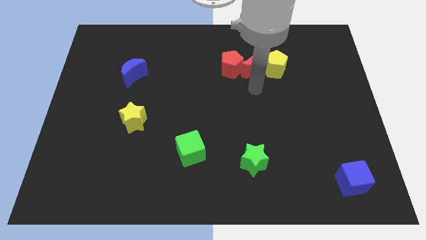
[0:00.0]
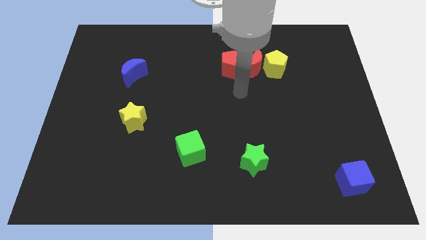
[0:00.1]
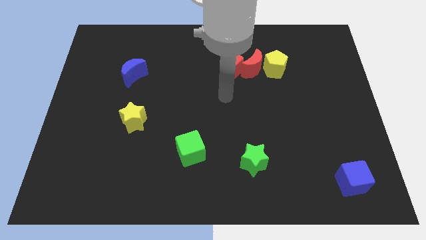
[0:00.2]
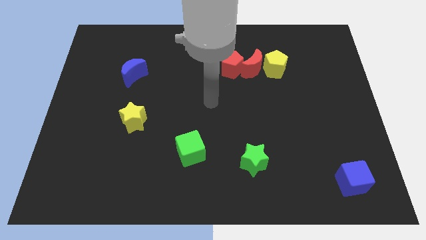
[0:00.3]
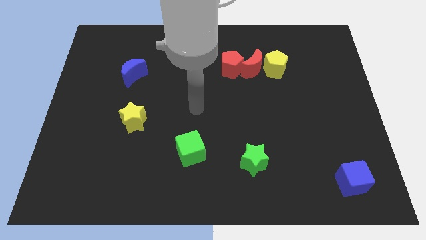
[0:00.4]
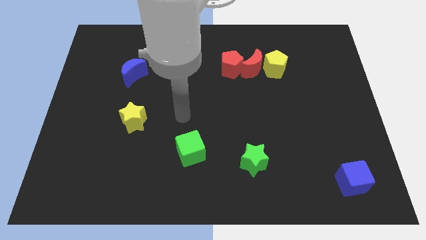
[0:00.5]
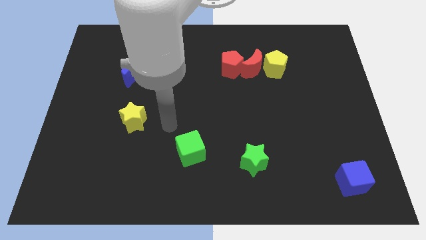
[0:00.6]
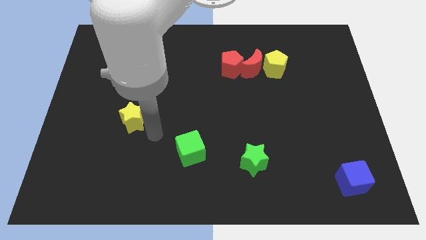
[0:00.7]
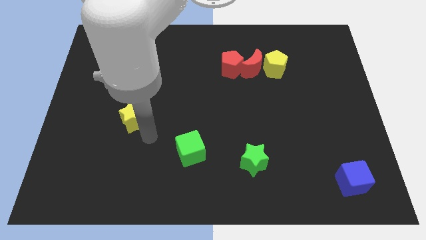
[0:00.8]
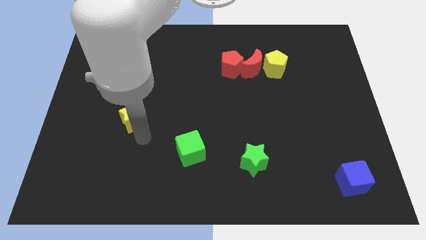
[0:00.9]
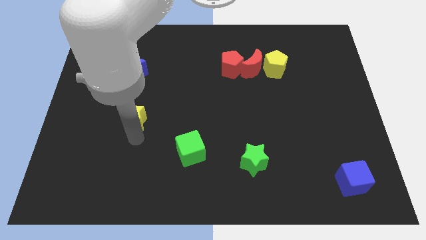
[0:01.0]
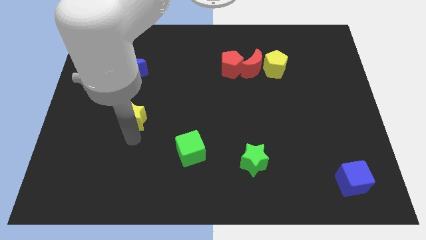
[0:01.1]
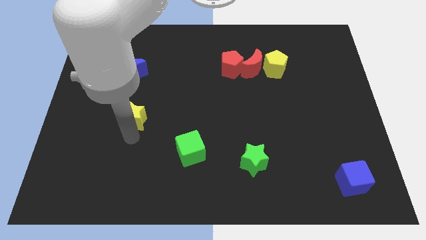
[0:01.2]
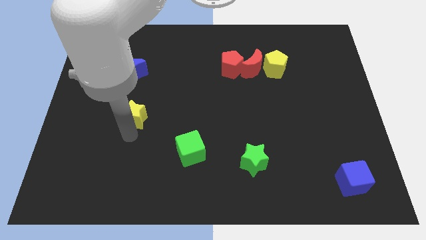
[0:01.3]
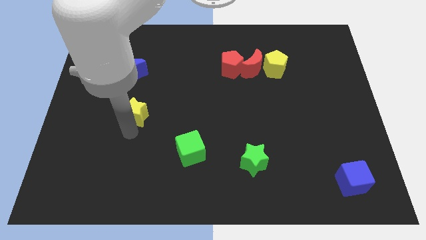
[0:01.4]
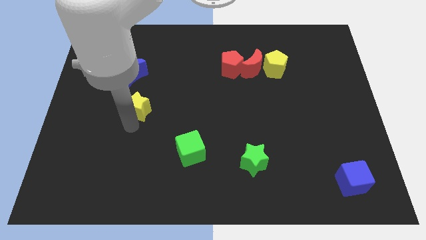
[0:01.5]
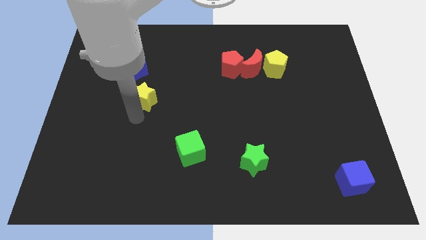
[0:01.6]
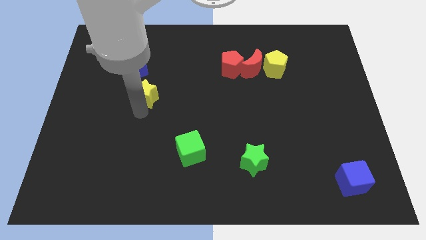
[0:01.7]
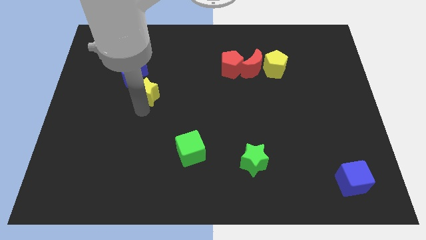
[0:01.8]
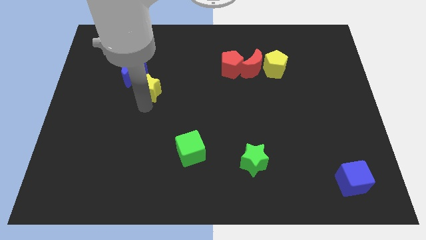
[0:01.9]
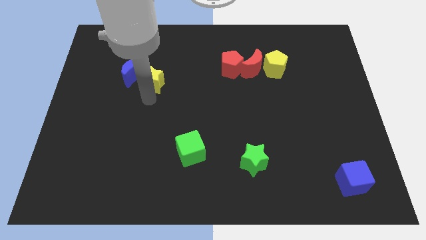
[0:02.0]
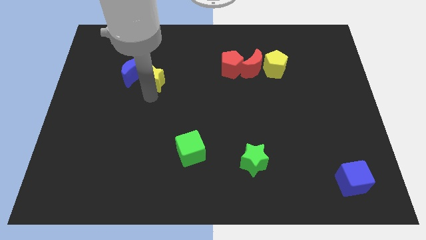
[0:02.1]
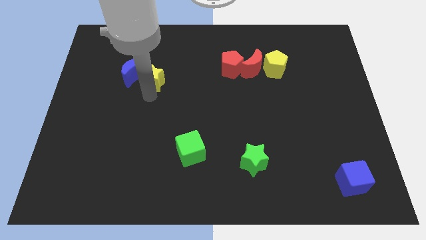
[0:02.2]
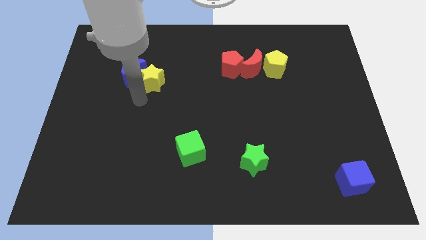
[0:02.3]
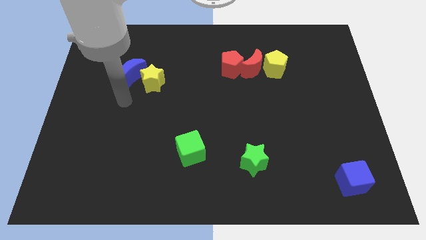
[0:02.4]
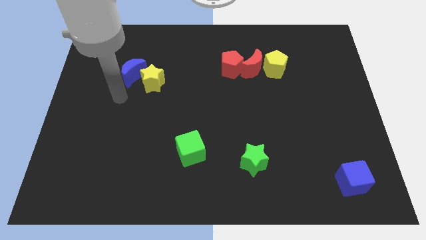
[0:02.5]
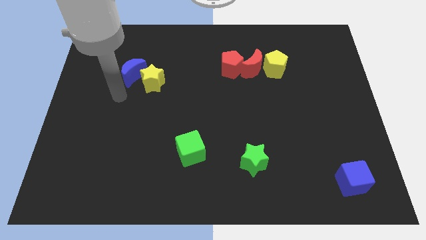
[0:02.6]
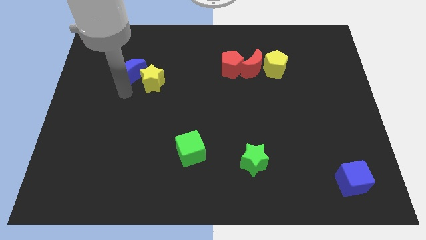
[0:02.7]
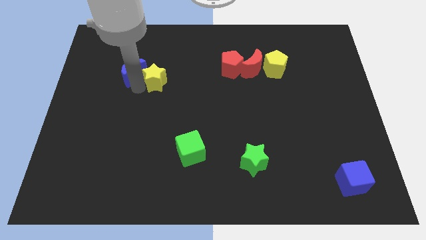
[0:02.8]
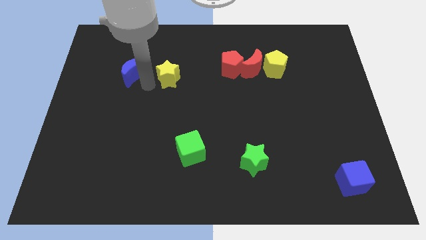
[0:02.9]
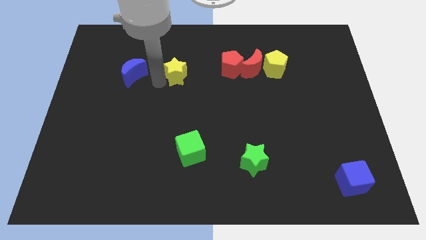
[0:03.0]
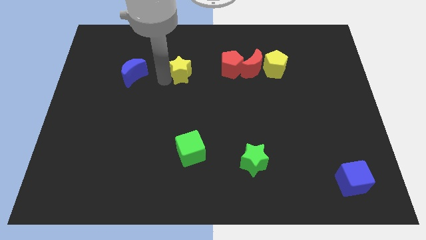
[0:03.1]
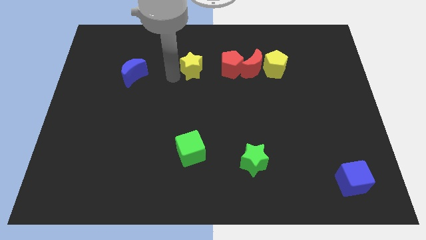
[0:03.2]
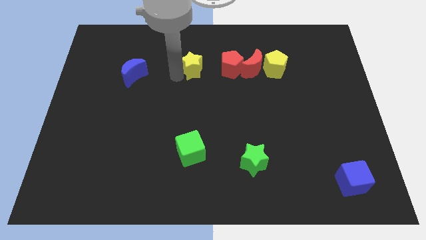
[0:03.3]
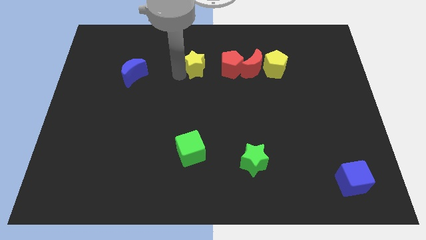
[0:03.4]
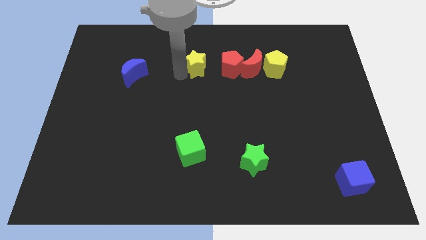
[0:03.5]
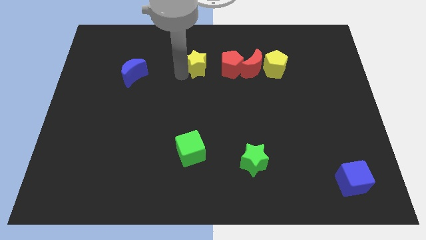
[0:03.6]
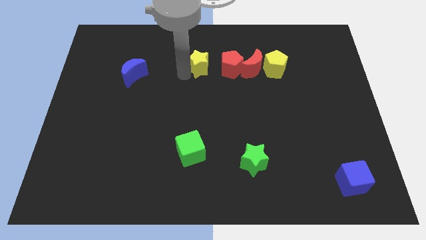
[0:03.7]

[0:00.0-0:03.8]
drag the yellow star towards the right side of the red pentagon

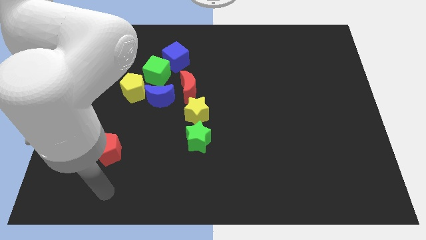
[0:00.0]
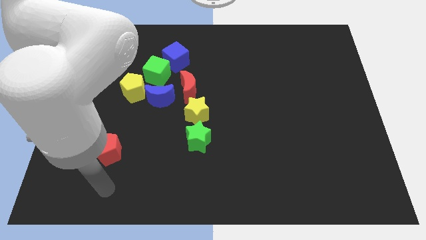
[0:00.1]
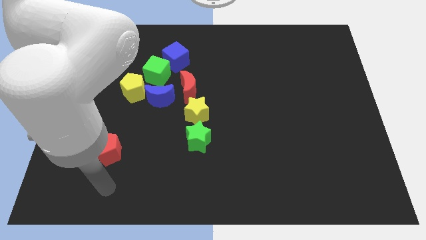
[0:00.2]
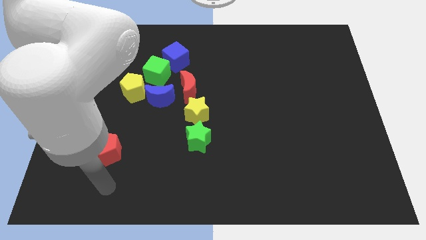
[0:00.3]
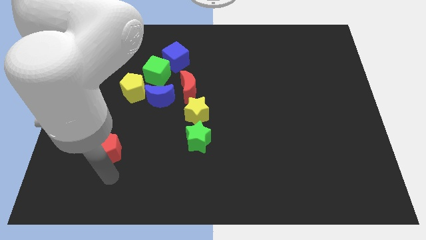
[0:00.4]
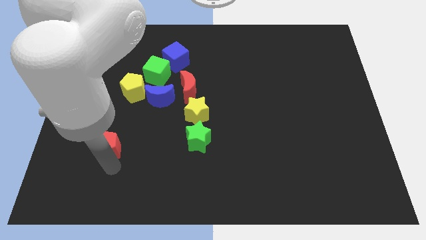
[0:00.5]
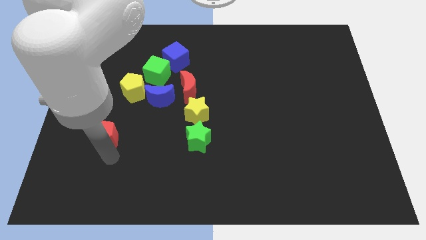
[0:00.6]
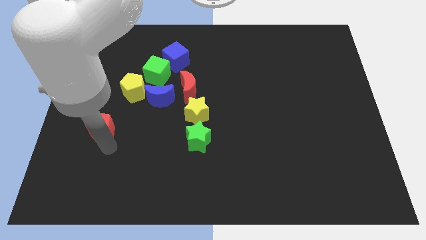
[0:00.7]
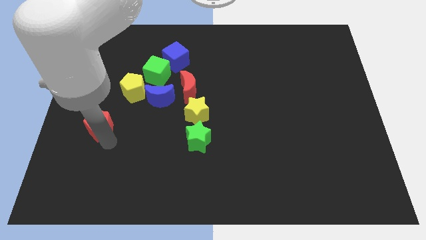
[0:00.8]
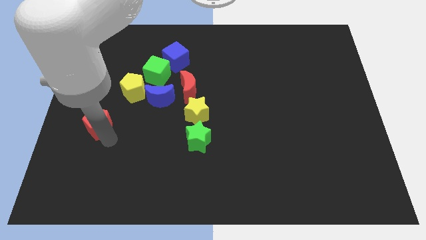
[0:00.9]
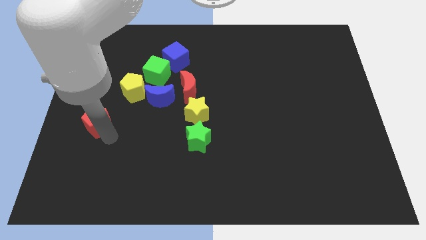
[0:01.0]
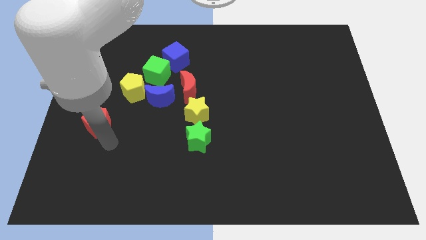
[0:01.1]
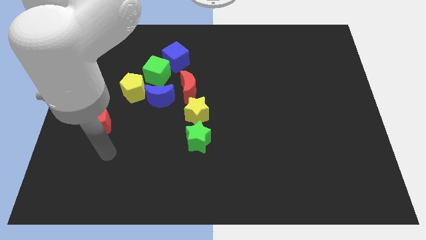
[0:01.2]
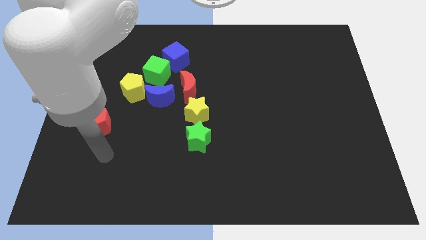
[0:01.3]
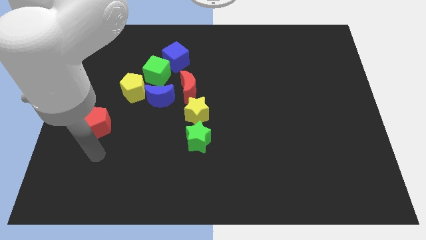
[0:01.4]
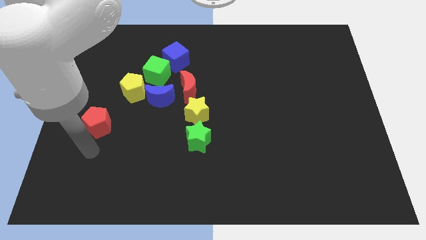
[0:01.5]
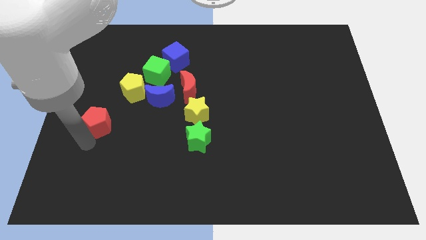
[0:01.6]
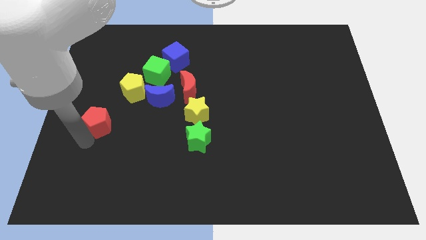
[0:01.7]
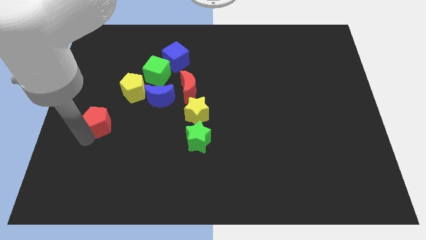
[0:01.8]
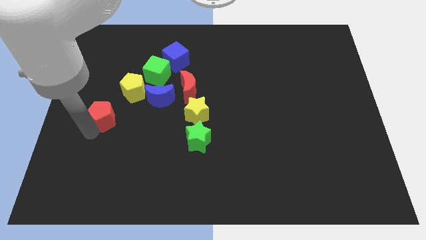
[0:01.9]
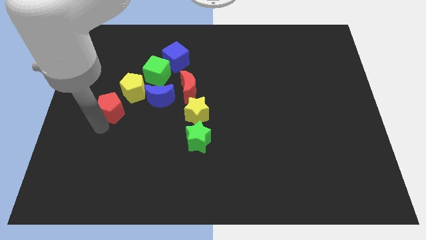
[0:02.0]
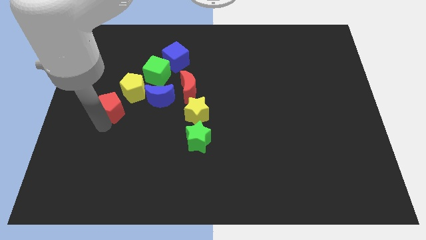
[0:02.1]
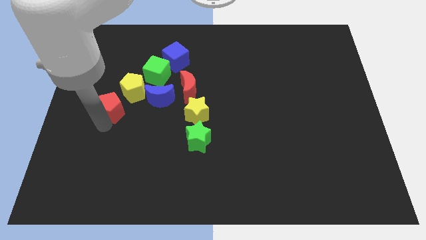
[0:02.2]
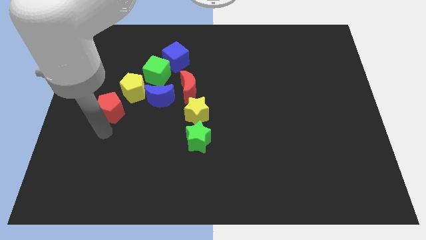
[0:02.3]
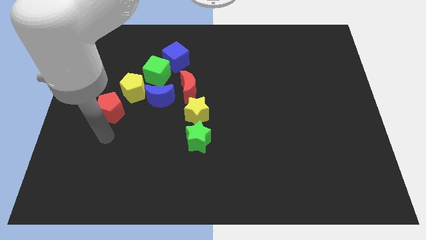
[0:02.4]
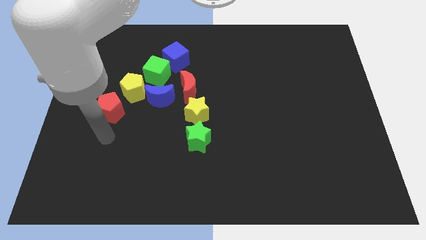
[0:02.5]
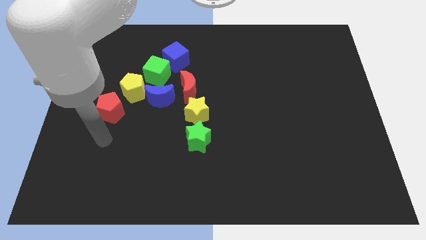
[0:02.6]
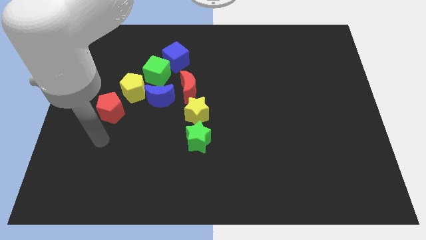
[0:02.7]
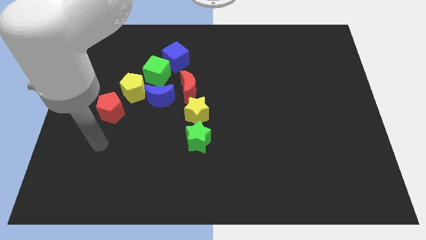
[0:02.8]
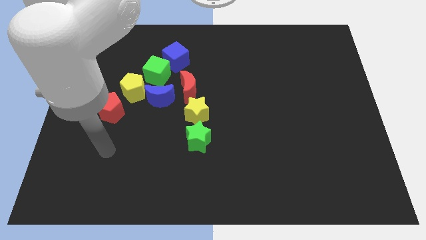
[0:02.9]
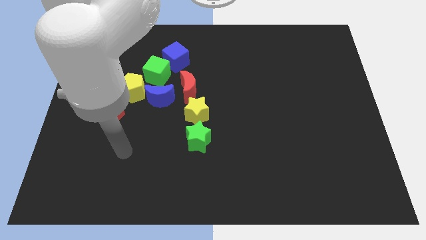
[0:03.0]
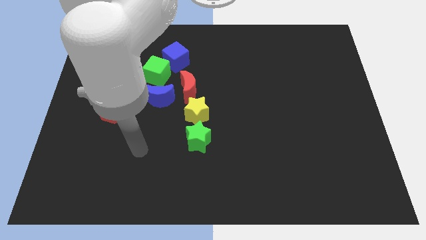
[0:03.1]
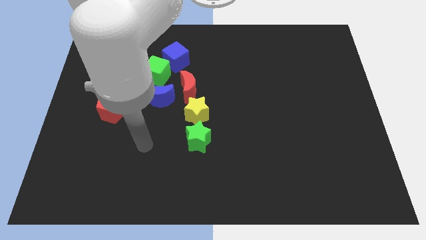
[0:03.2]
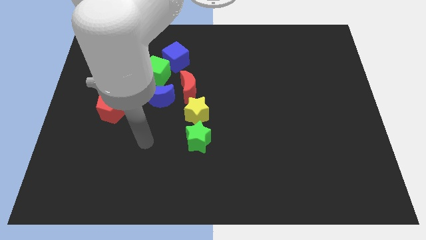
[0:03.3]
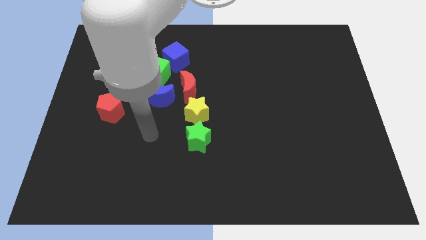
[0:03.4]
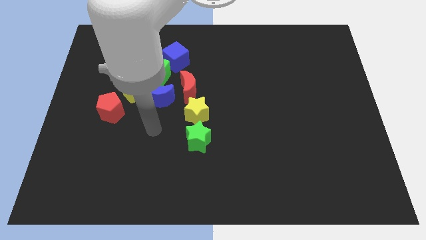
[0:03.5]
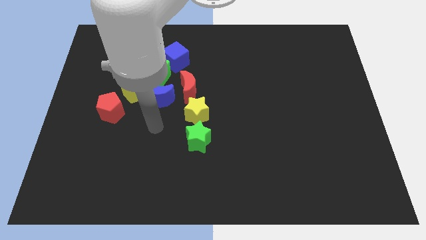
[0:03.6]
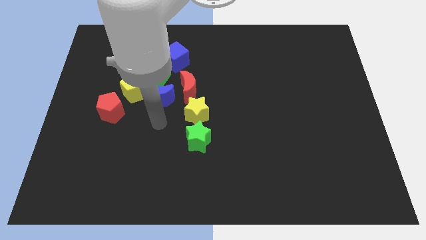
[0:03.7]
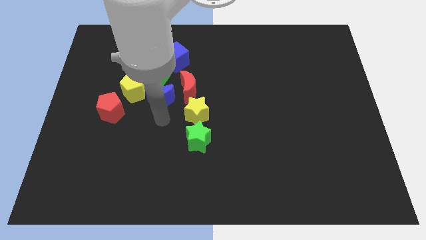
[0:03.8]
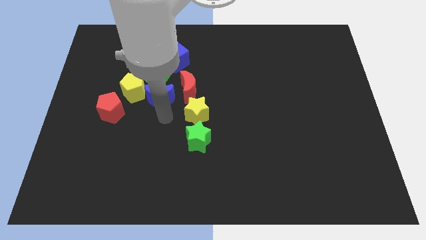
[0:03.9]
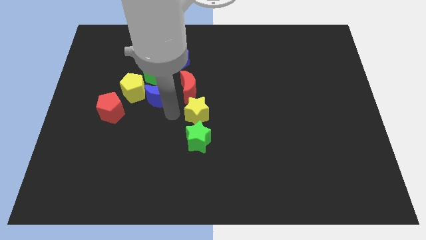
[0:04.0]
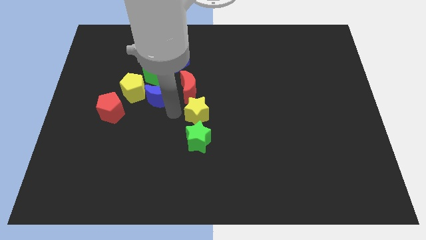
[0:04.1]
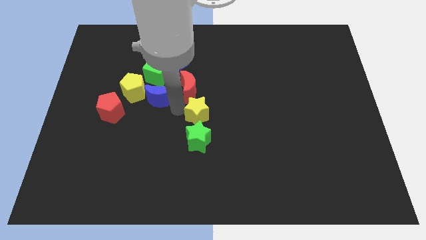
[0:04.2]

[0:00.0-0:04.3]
place red pentagon to the bottom left of the yellow pentagon

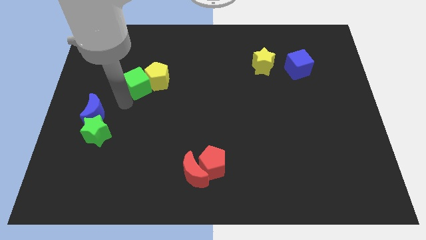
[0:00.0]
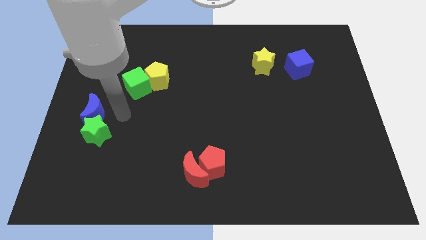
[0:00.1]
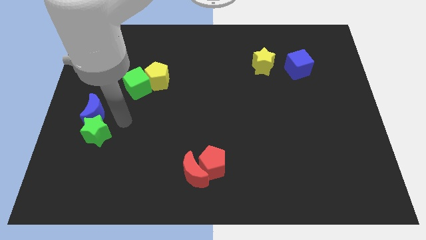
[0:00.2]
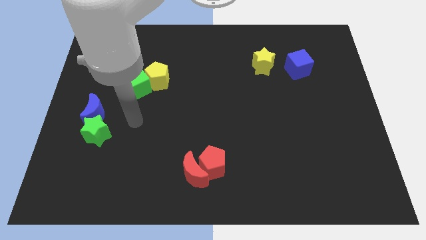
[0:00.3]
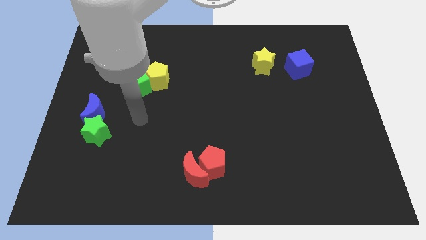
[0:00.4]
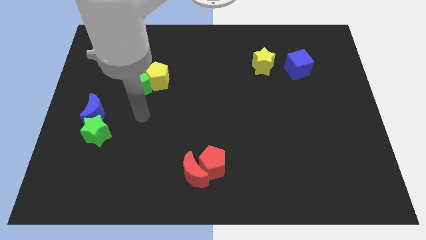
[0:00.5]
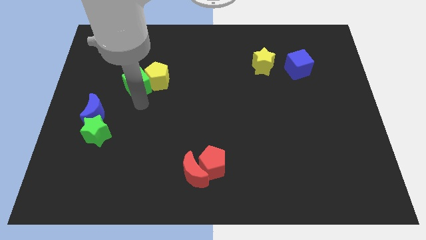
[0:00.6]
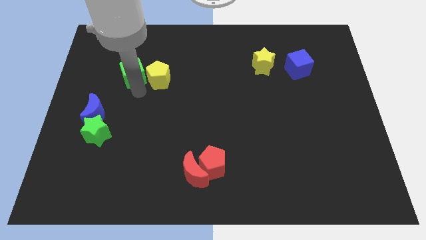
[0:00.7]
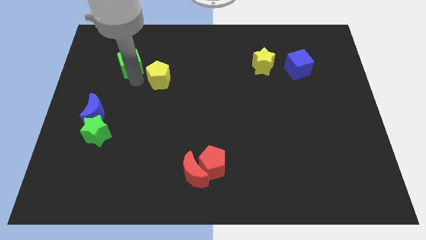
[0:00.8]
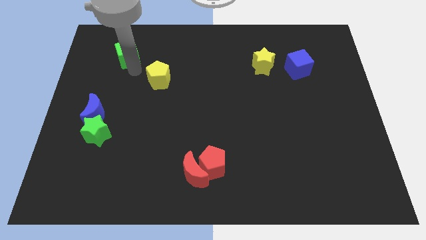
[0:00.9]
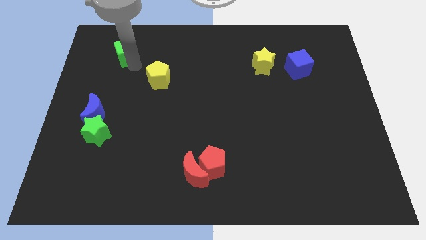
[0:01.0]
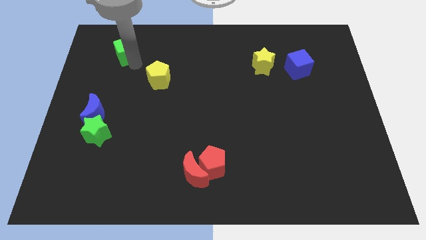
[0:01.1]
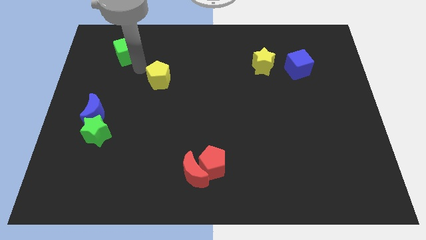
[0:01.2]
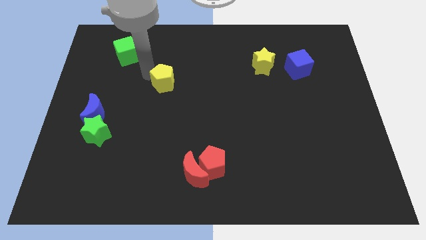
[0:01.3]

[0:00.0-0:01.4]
separate green cube and yellow pentagon
